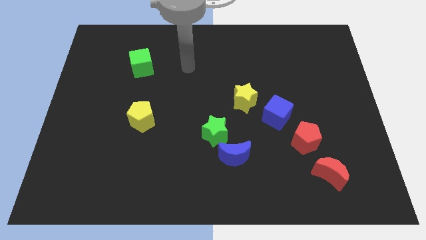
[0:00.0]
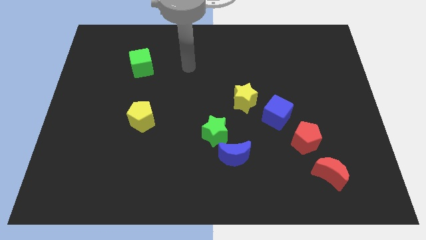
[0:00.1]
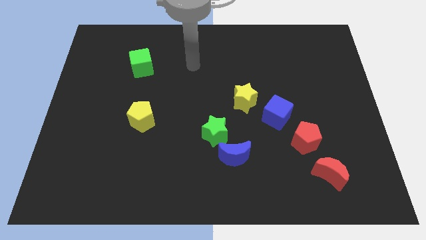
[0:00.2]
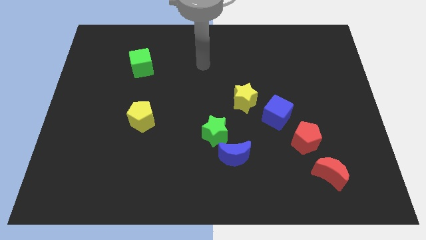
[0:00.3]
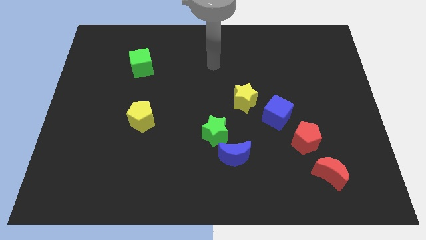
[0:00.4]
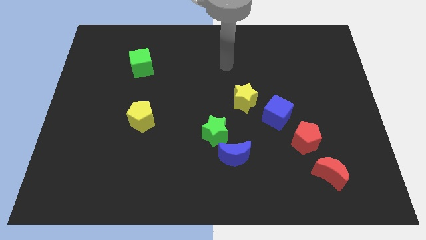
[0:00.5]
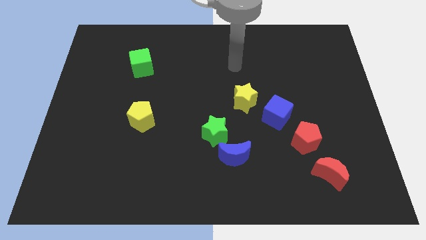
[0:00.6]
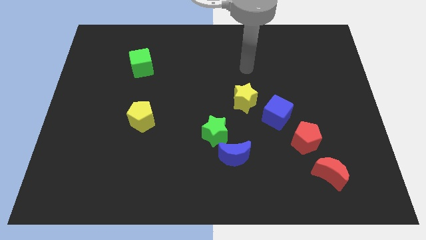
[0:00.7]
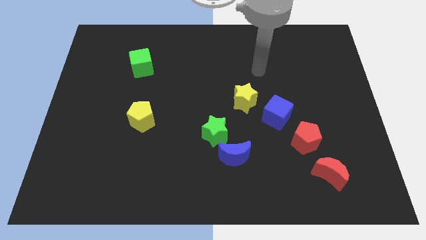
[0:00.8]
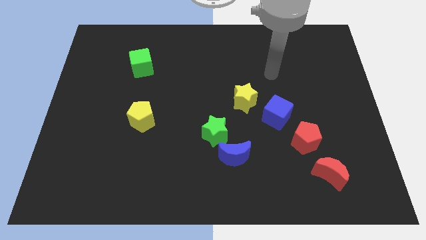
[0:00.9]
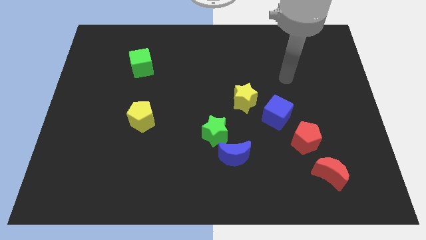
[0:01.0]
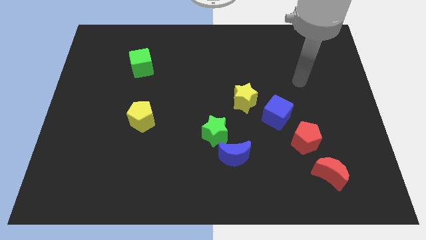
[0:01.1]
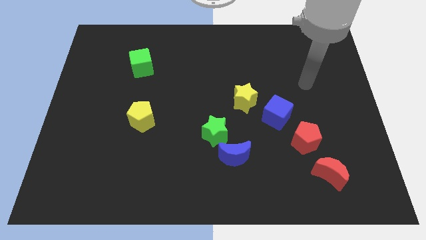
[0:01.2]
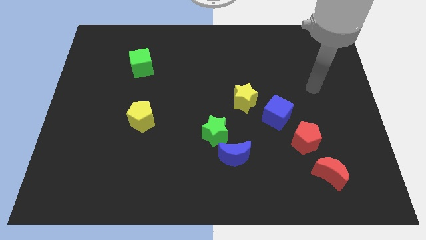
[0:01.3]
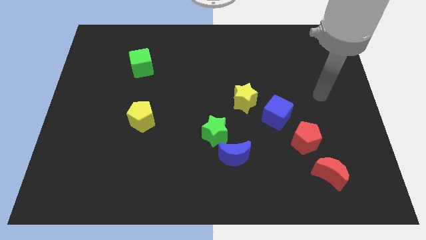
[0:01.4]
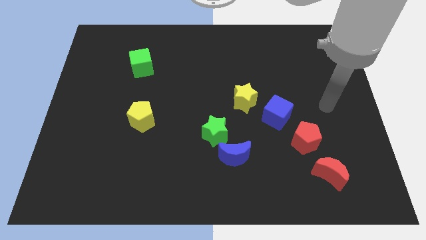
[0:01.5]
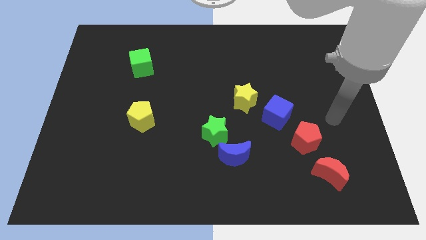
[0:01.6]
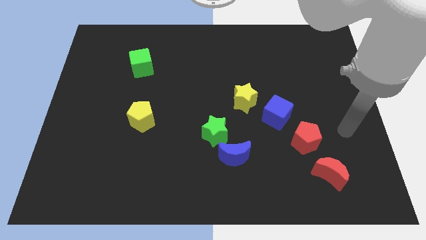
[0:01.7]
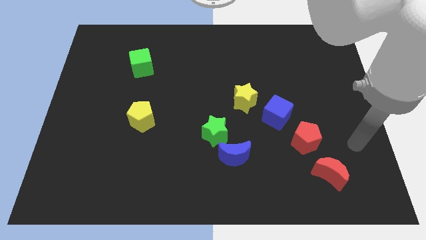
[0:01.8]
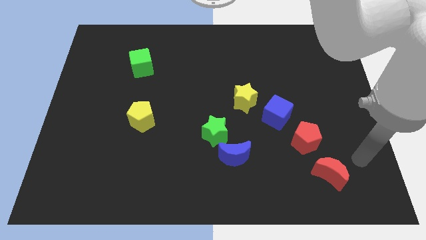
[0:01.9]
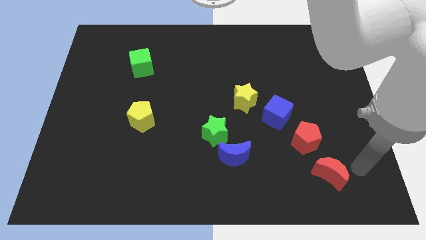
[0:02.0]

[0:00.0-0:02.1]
move the arm towards the red crescent

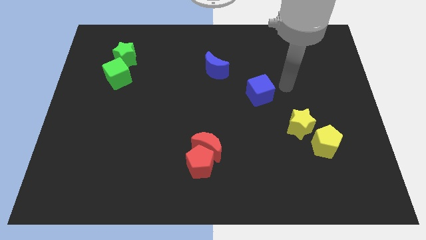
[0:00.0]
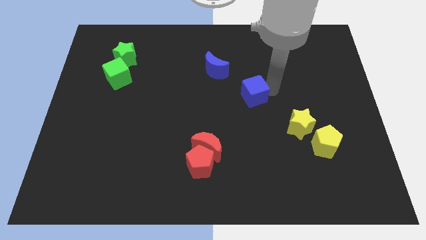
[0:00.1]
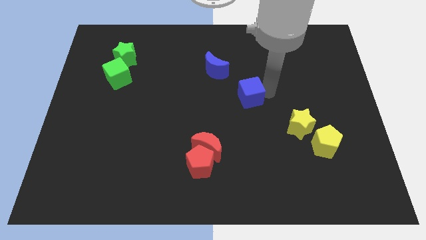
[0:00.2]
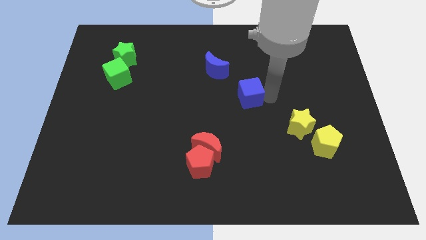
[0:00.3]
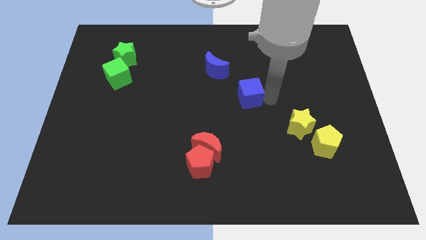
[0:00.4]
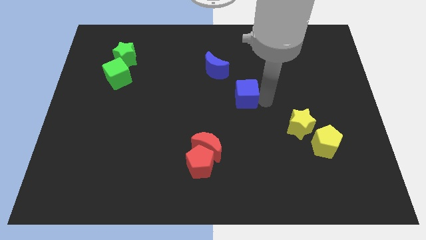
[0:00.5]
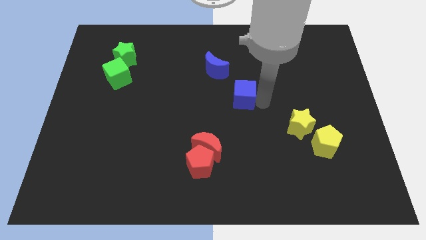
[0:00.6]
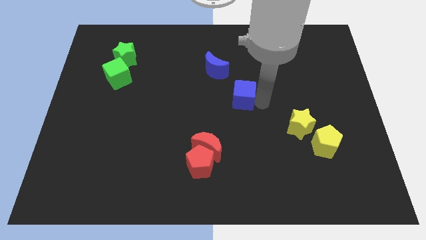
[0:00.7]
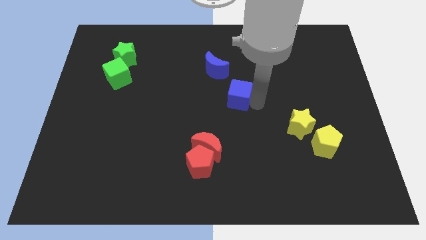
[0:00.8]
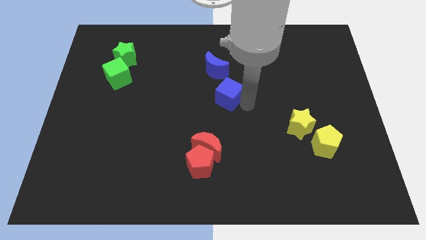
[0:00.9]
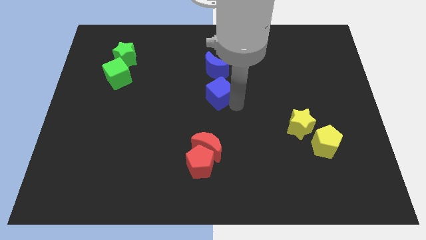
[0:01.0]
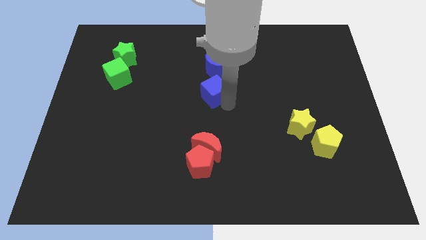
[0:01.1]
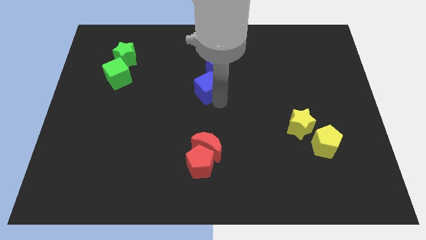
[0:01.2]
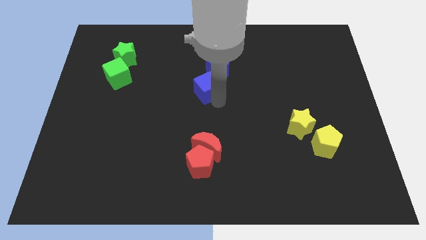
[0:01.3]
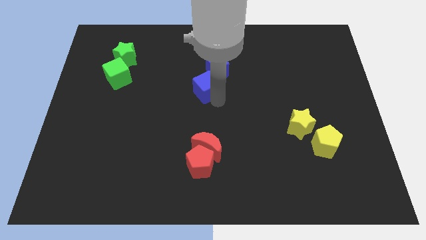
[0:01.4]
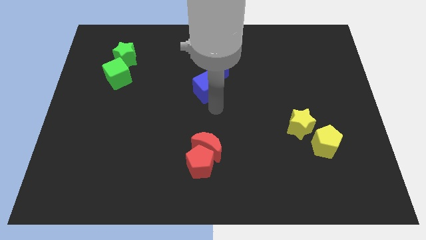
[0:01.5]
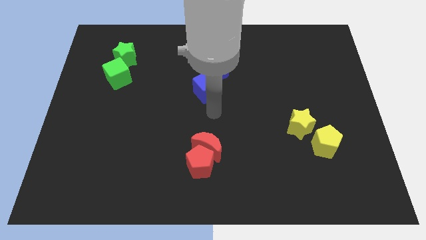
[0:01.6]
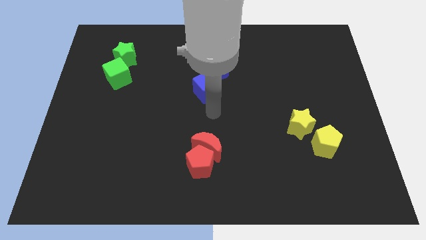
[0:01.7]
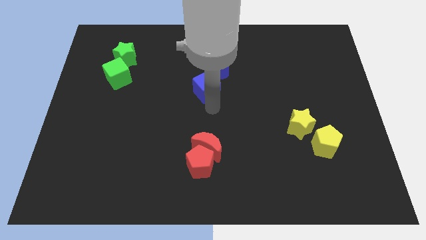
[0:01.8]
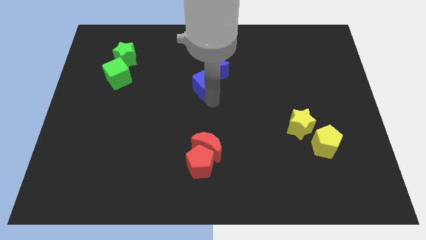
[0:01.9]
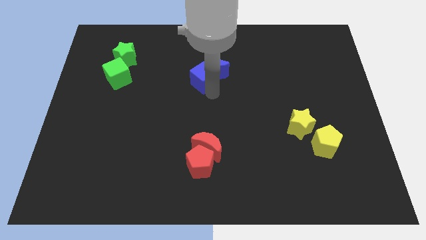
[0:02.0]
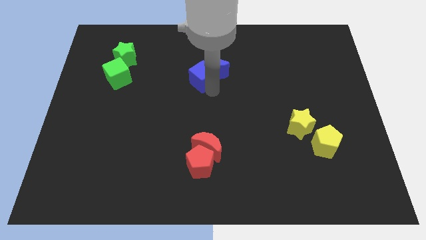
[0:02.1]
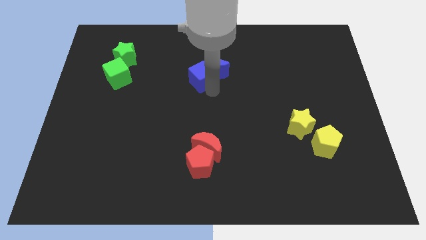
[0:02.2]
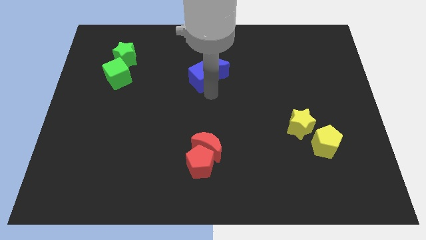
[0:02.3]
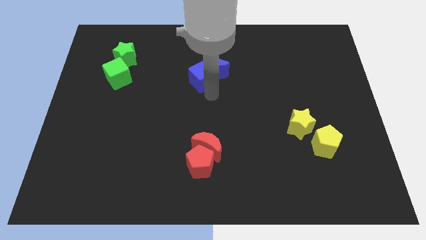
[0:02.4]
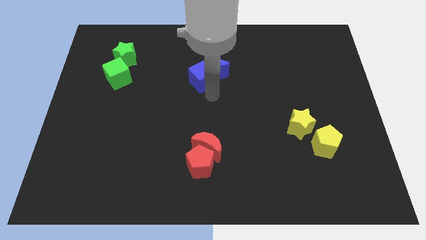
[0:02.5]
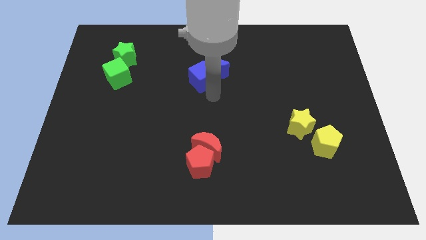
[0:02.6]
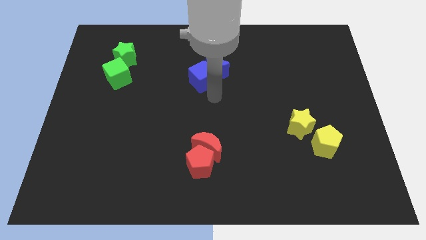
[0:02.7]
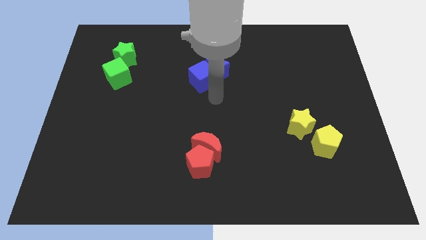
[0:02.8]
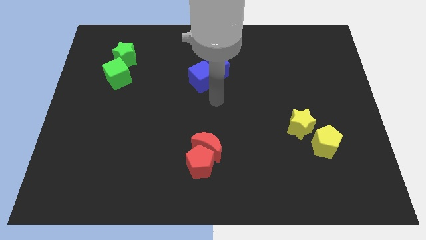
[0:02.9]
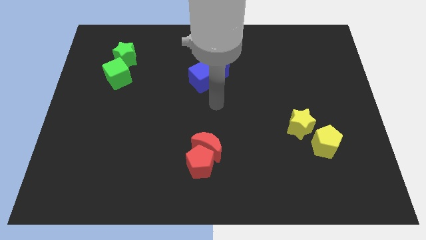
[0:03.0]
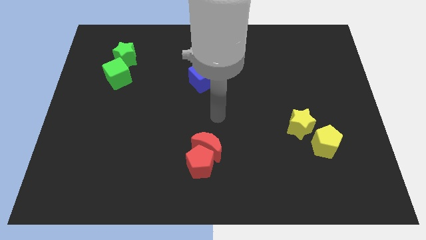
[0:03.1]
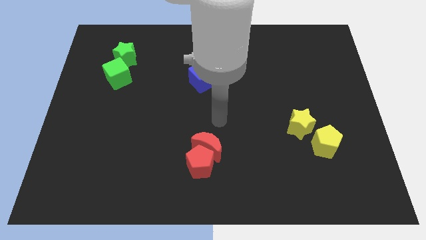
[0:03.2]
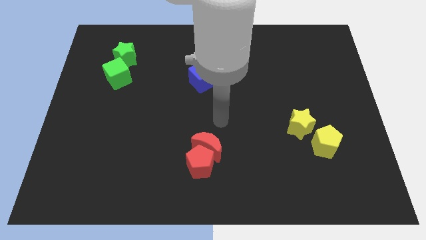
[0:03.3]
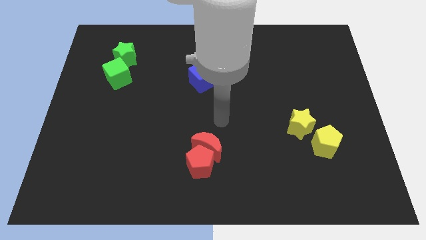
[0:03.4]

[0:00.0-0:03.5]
move the arm near the red moon

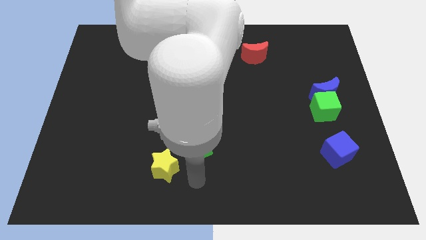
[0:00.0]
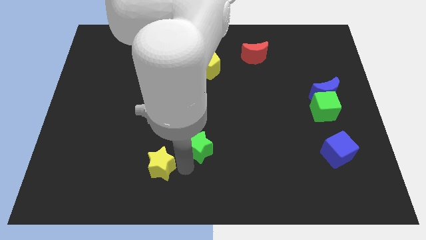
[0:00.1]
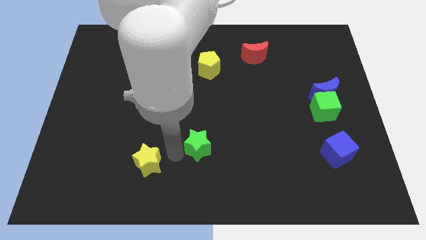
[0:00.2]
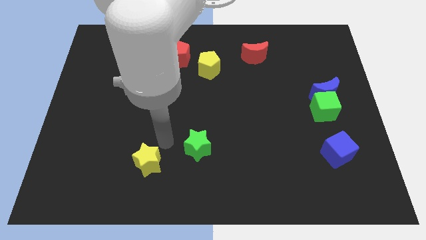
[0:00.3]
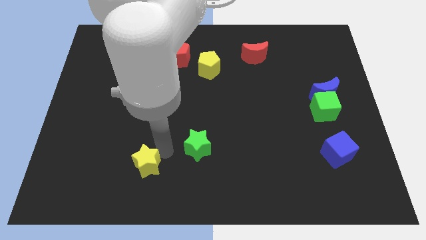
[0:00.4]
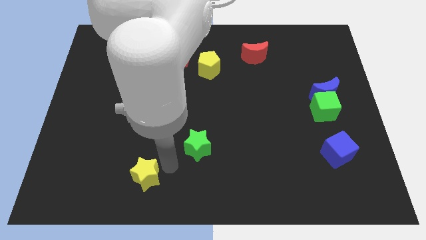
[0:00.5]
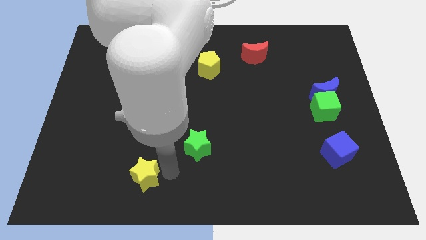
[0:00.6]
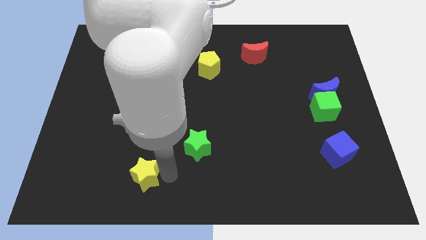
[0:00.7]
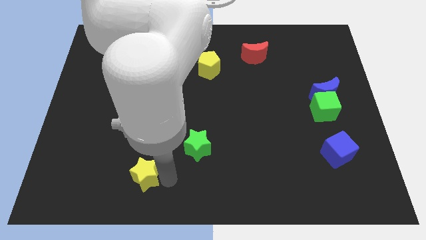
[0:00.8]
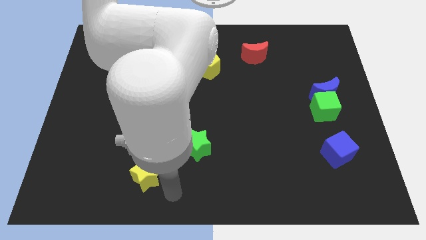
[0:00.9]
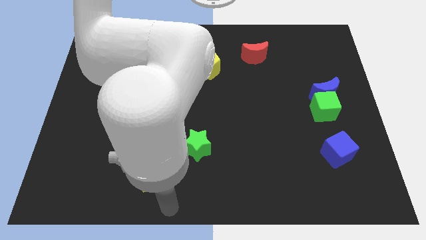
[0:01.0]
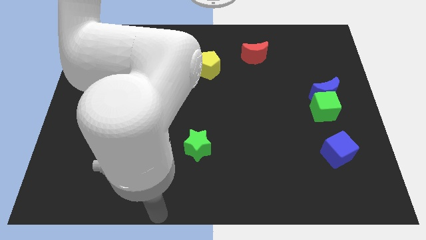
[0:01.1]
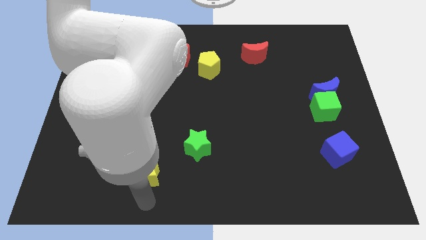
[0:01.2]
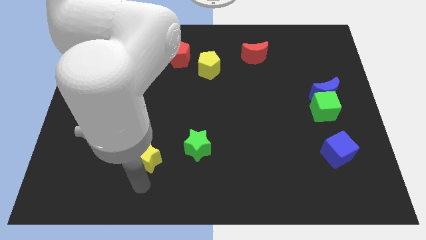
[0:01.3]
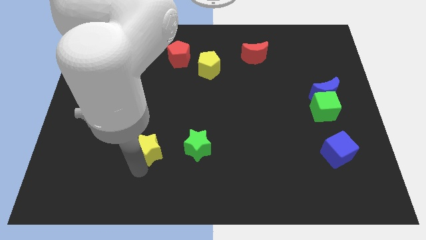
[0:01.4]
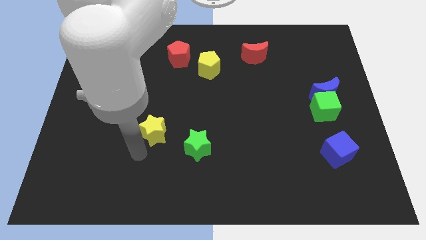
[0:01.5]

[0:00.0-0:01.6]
put the yellow star to the left side of the green star

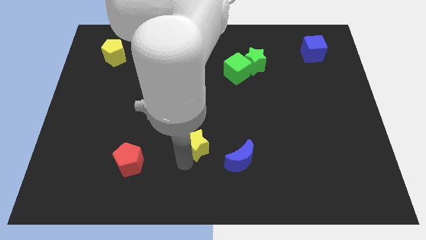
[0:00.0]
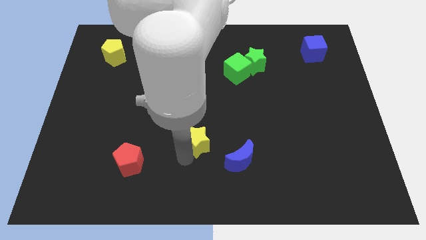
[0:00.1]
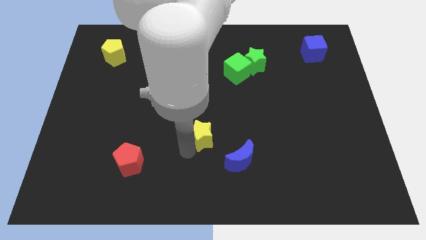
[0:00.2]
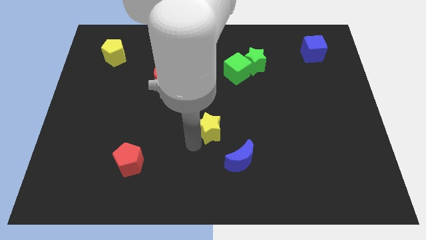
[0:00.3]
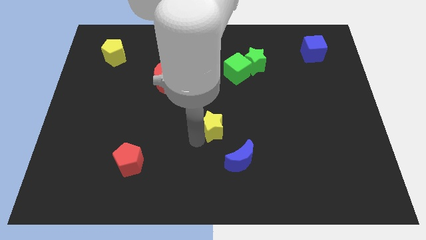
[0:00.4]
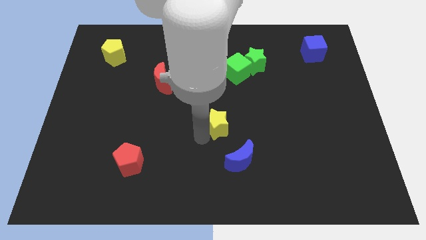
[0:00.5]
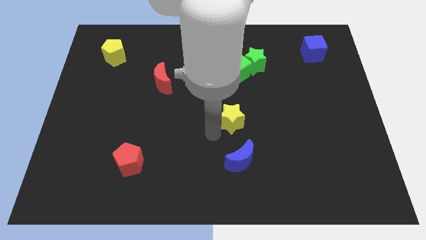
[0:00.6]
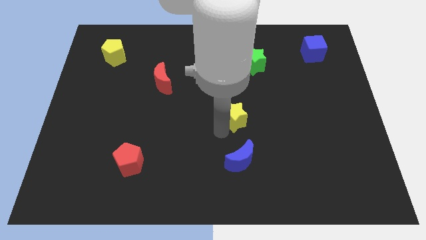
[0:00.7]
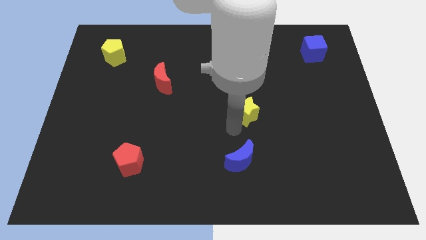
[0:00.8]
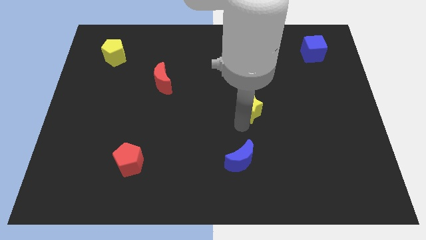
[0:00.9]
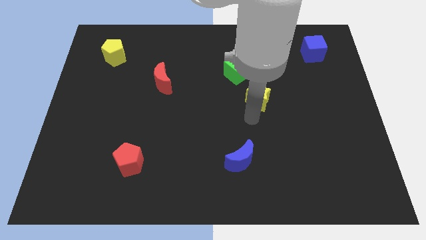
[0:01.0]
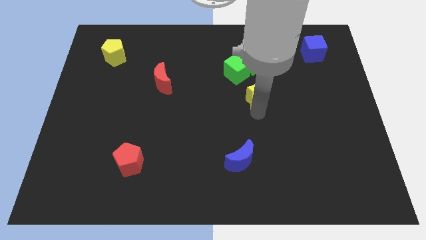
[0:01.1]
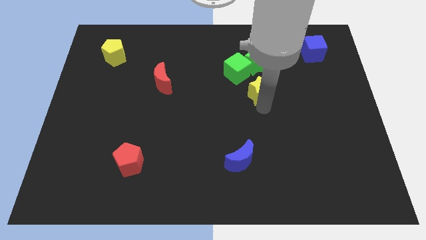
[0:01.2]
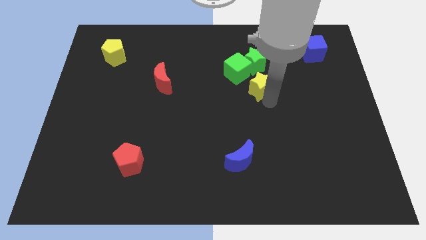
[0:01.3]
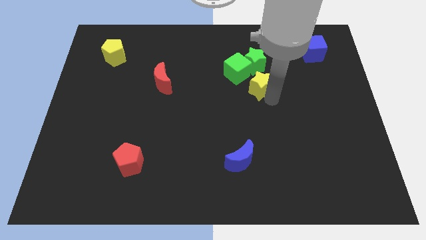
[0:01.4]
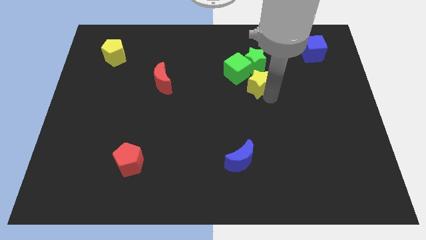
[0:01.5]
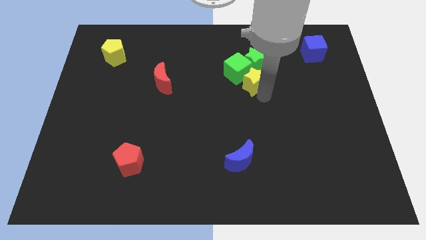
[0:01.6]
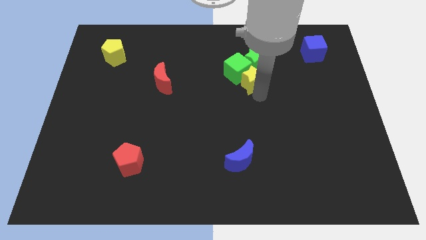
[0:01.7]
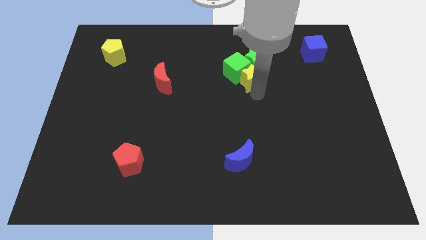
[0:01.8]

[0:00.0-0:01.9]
place the yellow star below the green star
